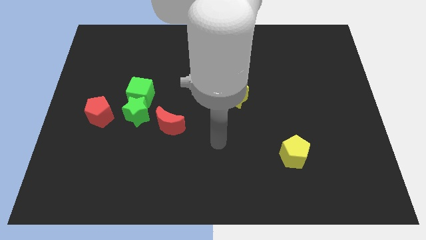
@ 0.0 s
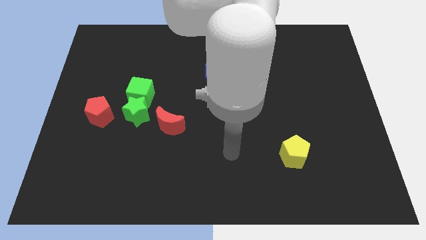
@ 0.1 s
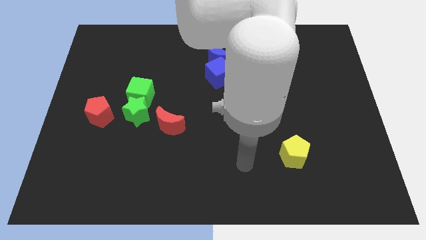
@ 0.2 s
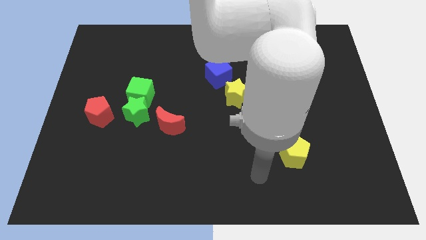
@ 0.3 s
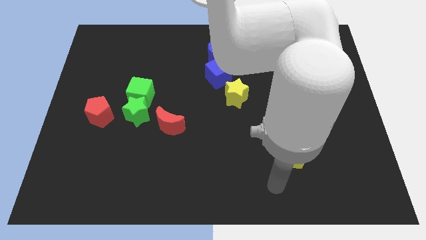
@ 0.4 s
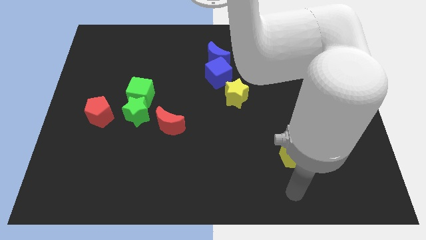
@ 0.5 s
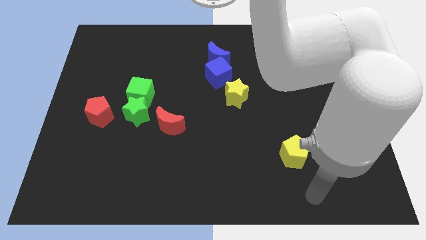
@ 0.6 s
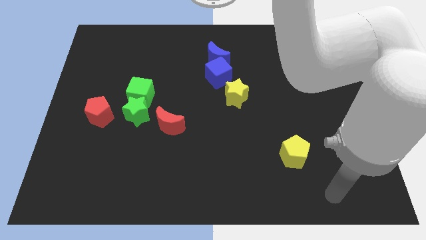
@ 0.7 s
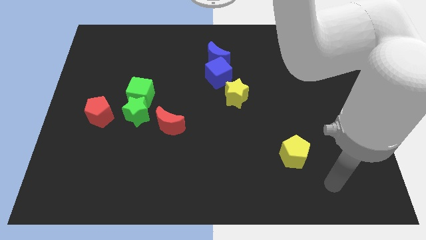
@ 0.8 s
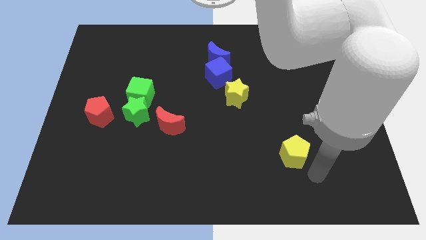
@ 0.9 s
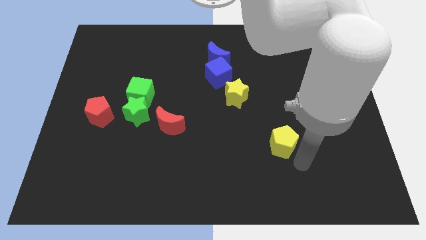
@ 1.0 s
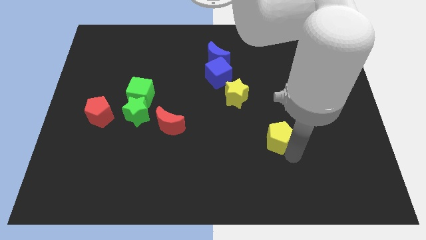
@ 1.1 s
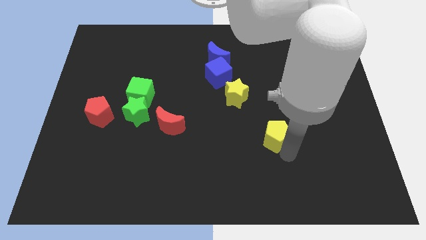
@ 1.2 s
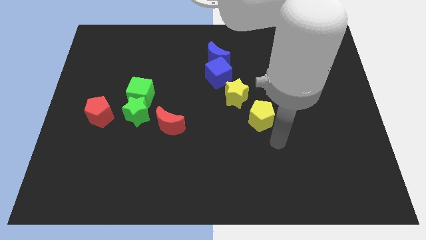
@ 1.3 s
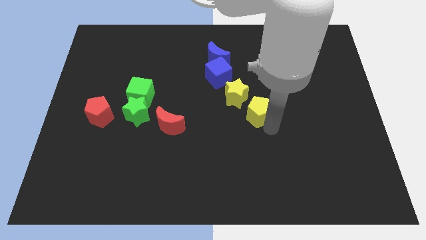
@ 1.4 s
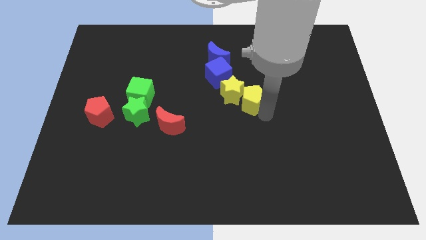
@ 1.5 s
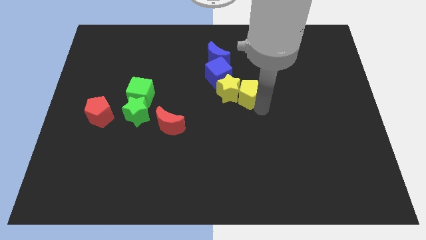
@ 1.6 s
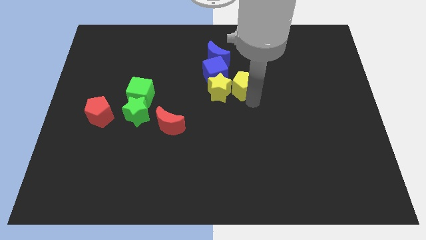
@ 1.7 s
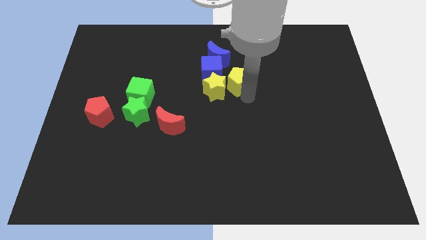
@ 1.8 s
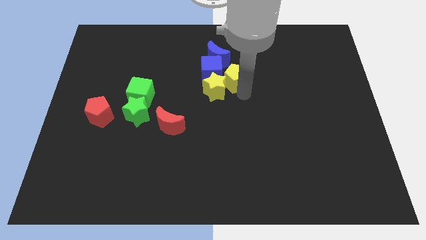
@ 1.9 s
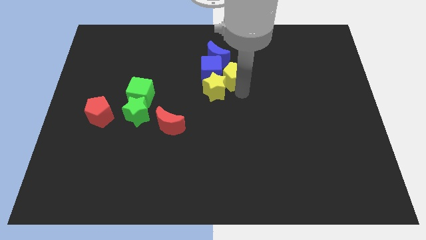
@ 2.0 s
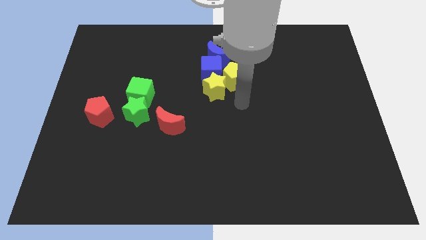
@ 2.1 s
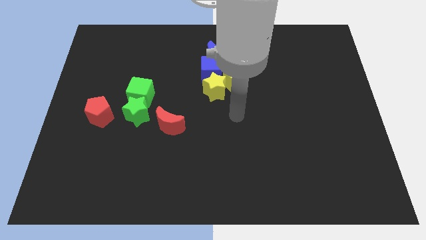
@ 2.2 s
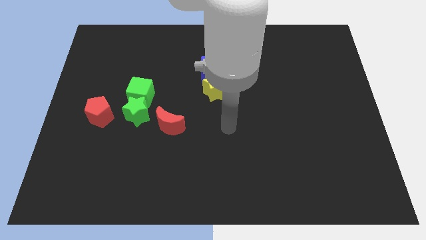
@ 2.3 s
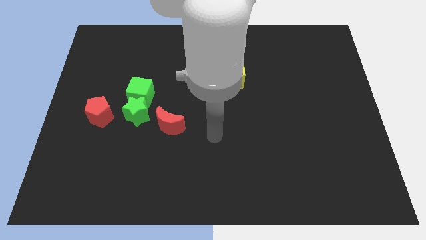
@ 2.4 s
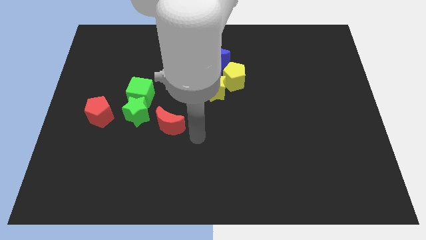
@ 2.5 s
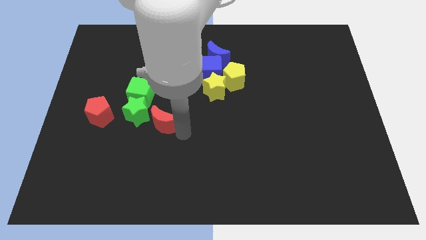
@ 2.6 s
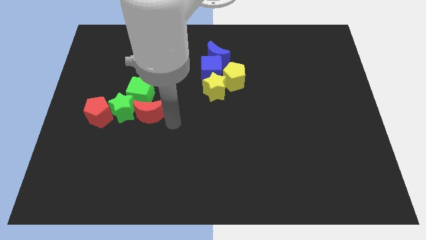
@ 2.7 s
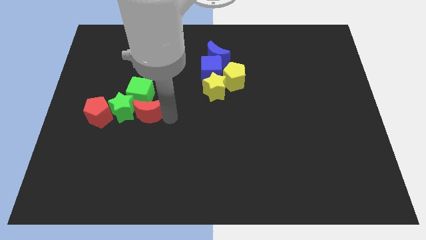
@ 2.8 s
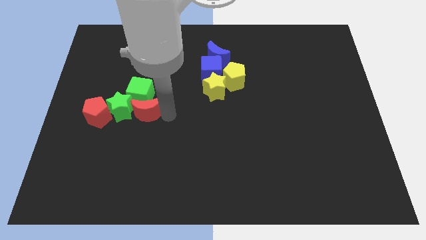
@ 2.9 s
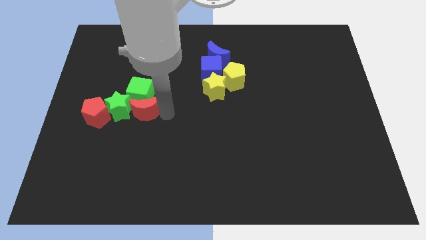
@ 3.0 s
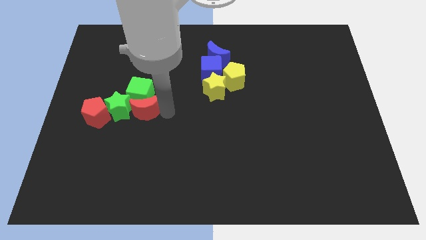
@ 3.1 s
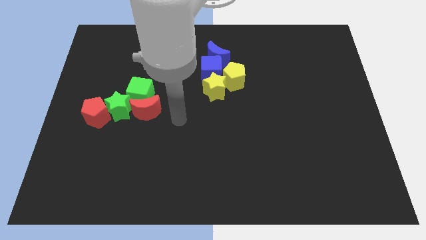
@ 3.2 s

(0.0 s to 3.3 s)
move yellow pentagon into the group of blocks

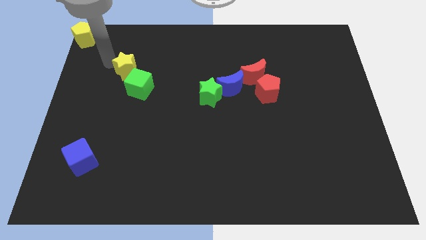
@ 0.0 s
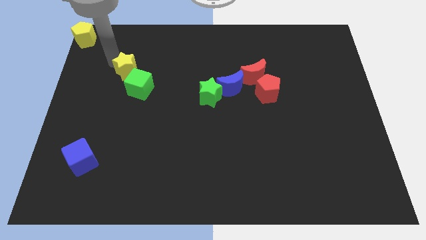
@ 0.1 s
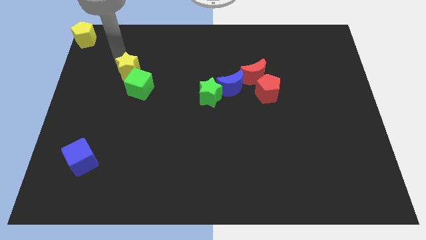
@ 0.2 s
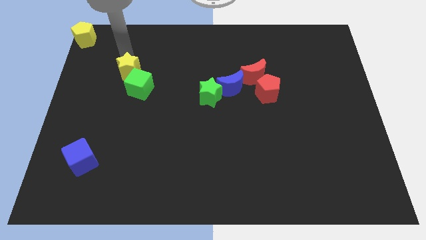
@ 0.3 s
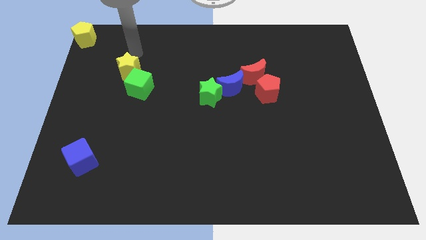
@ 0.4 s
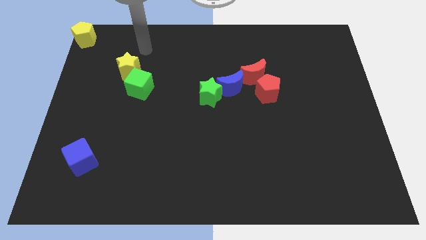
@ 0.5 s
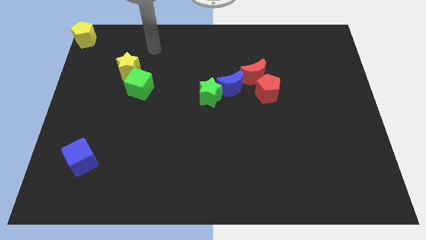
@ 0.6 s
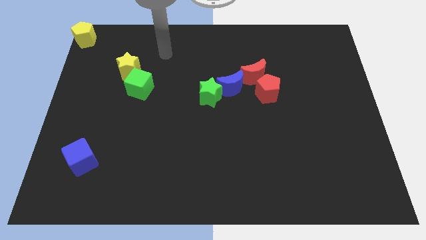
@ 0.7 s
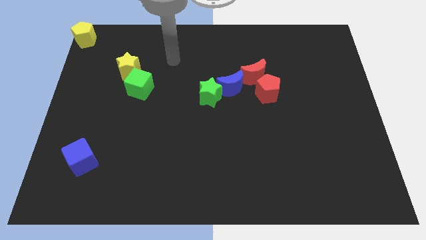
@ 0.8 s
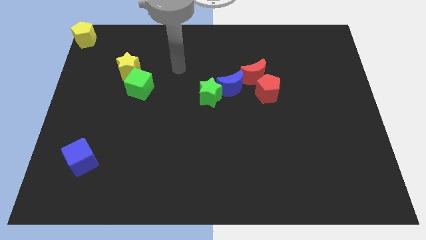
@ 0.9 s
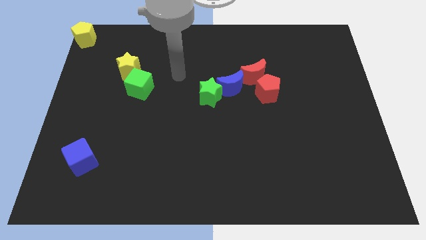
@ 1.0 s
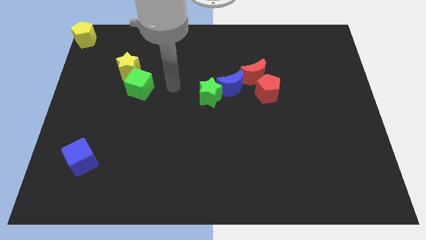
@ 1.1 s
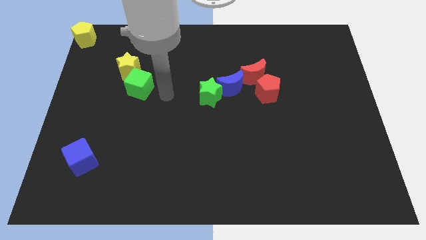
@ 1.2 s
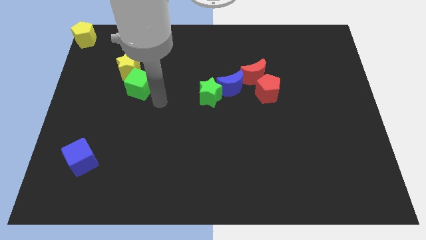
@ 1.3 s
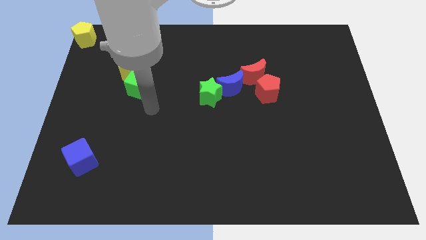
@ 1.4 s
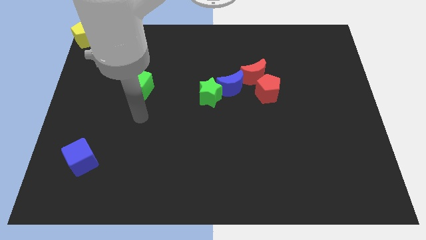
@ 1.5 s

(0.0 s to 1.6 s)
move arm below the green cube

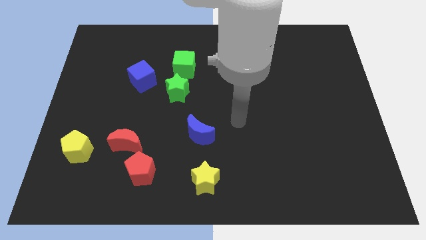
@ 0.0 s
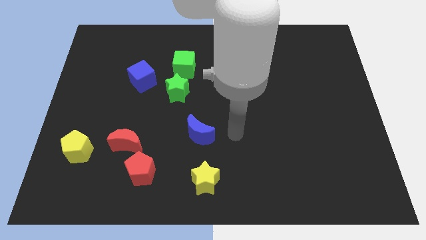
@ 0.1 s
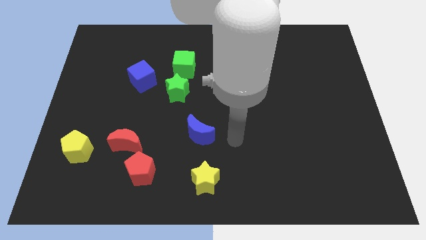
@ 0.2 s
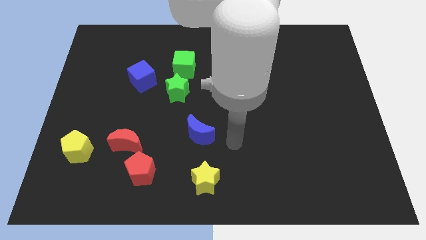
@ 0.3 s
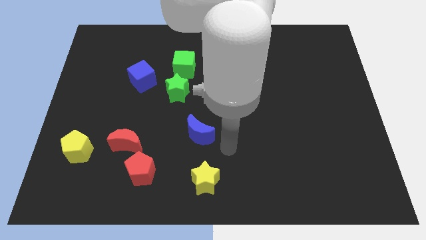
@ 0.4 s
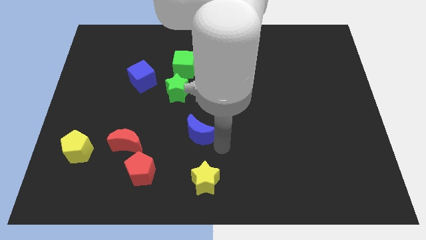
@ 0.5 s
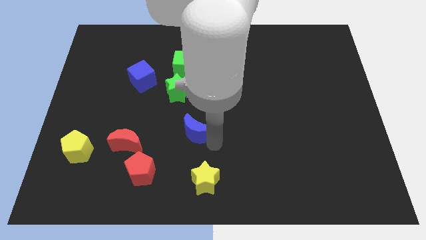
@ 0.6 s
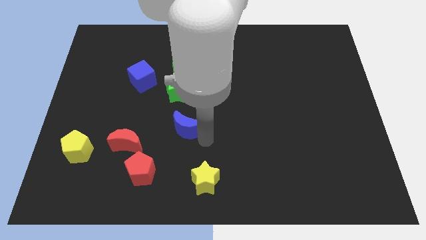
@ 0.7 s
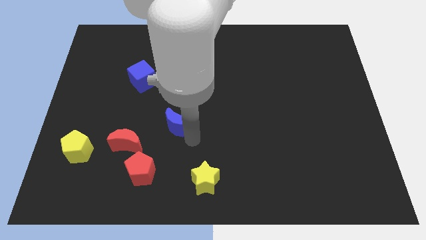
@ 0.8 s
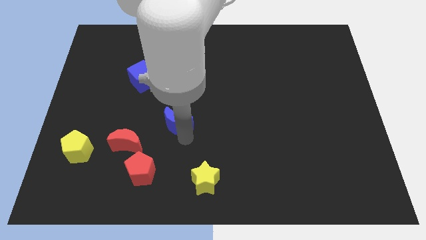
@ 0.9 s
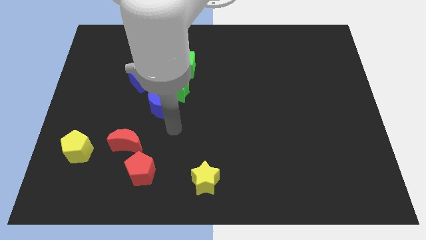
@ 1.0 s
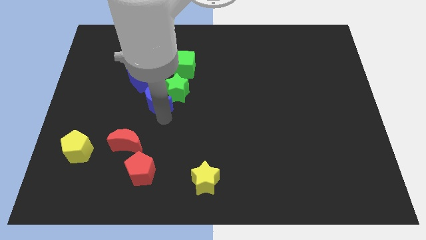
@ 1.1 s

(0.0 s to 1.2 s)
move the blue crescent towards the green star

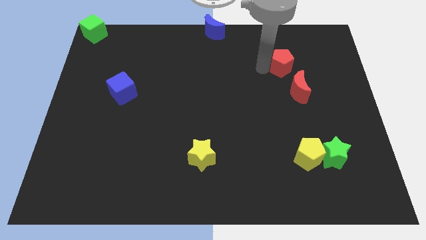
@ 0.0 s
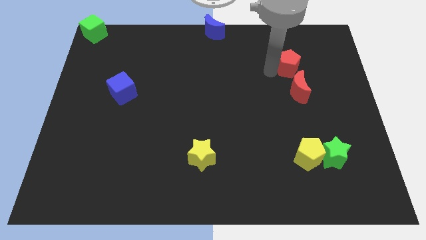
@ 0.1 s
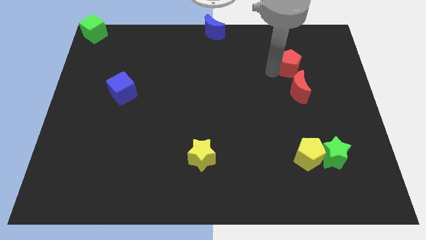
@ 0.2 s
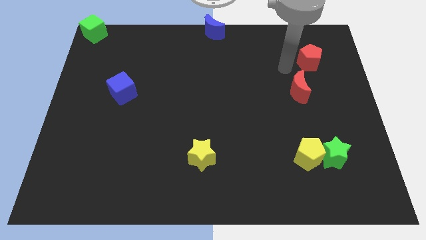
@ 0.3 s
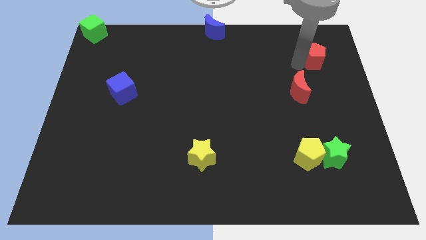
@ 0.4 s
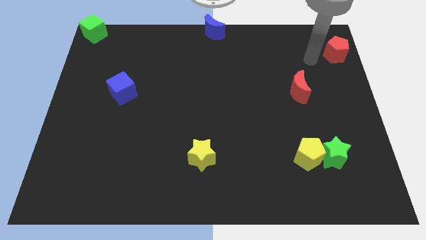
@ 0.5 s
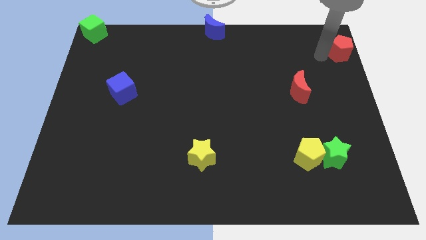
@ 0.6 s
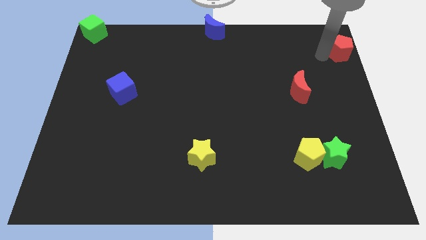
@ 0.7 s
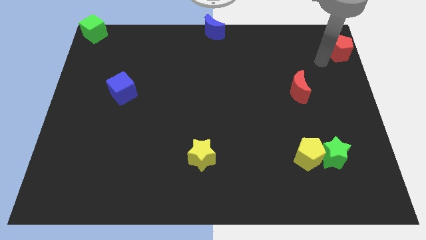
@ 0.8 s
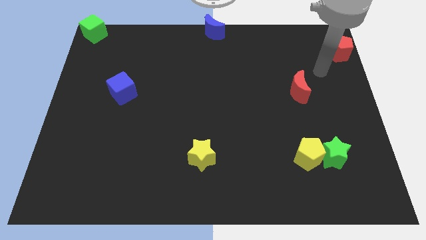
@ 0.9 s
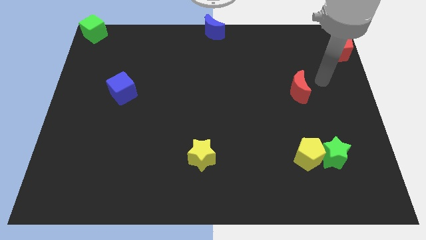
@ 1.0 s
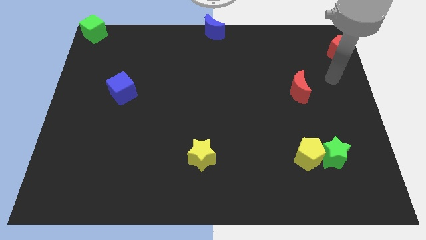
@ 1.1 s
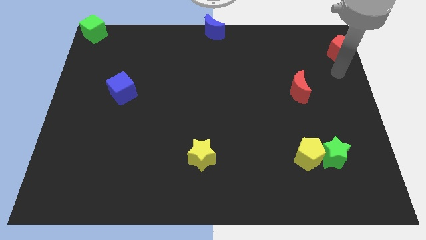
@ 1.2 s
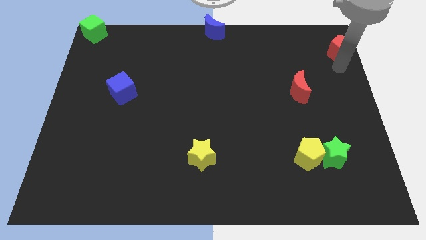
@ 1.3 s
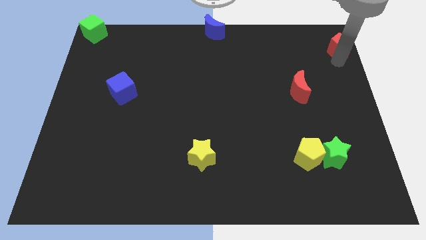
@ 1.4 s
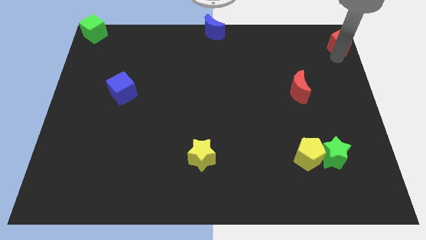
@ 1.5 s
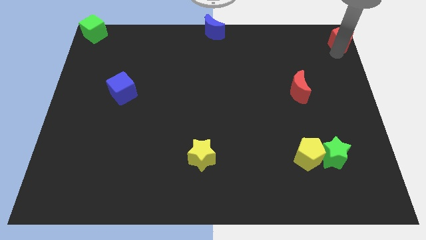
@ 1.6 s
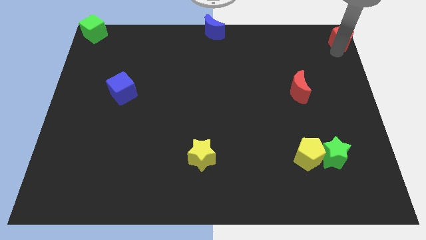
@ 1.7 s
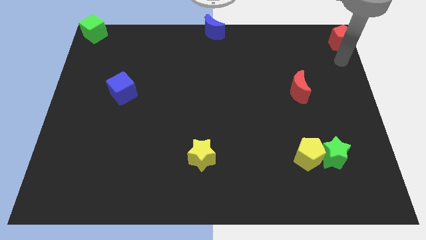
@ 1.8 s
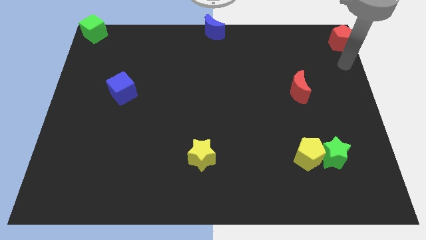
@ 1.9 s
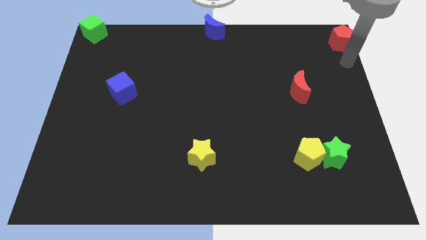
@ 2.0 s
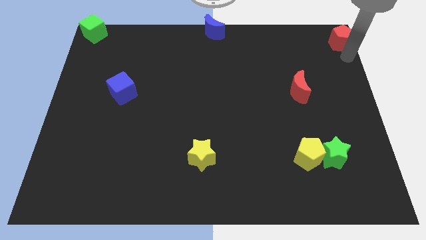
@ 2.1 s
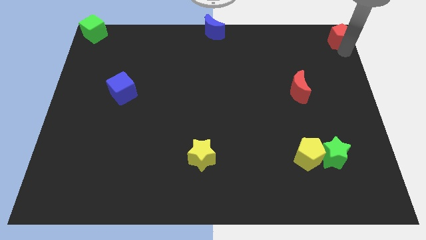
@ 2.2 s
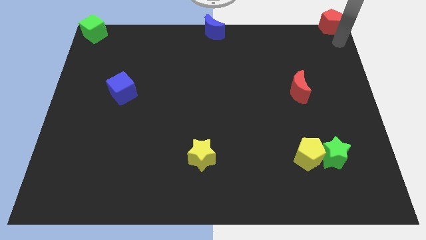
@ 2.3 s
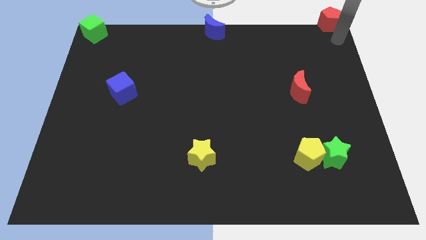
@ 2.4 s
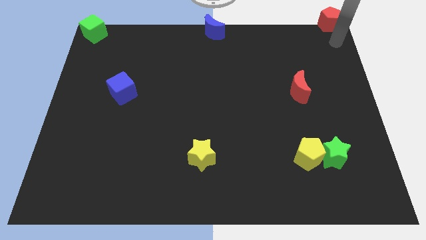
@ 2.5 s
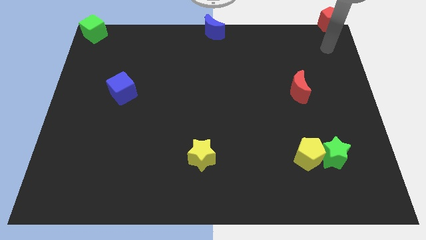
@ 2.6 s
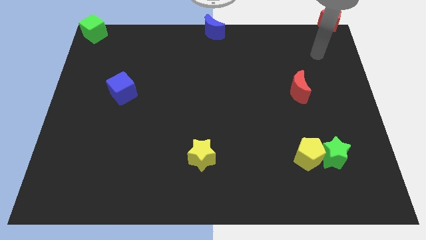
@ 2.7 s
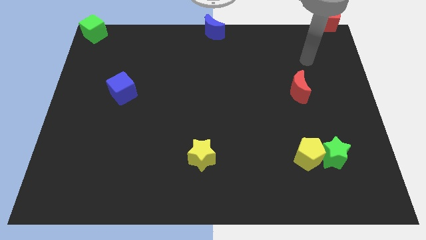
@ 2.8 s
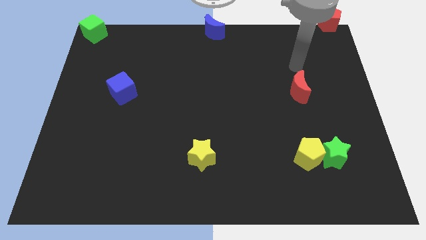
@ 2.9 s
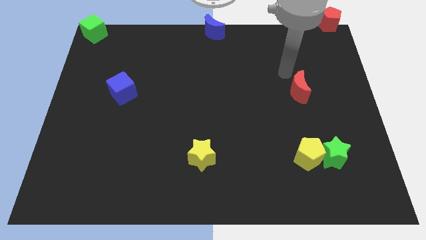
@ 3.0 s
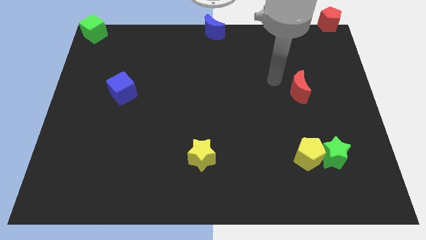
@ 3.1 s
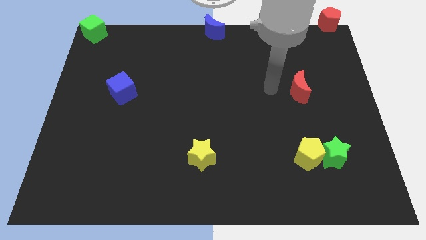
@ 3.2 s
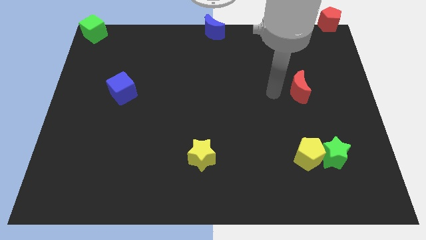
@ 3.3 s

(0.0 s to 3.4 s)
push the red pentagon to the top right corner of board
